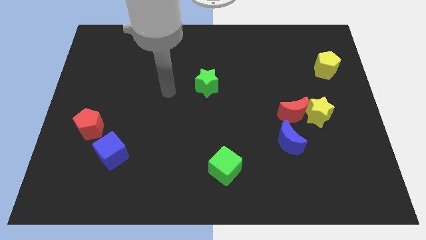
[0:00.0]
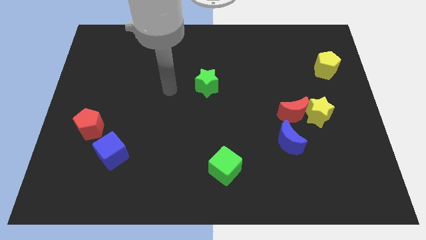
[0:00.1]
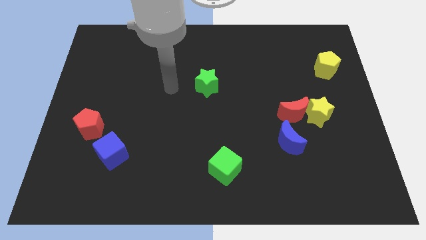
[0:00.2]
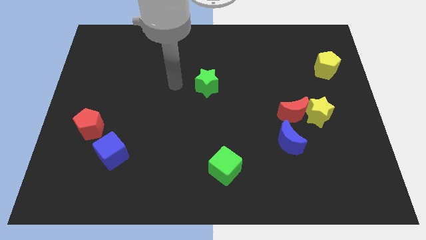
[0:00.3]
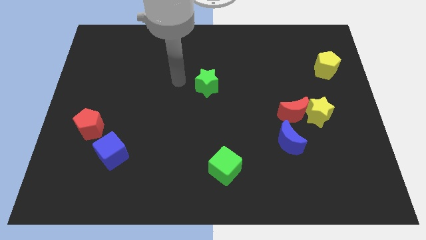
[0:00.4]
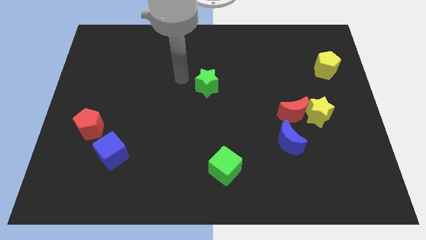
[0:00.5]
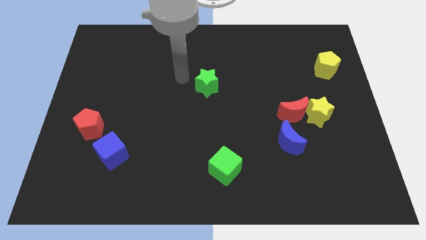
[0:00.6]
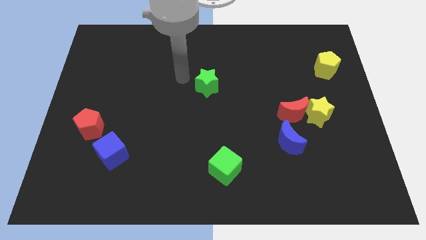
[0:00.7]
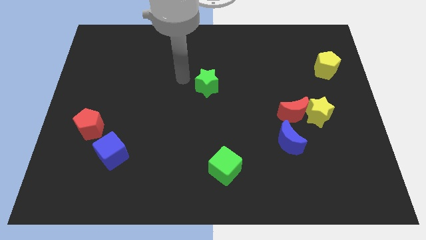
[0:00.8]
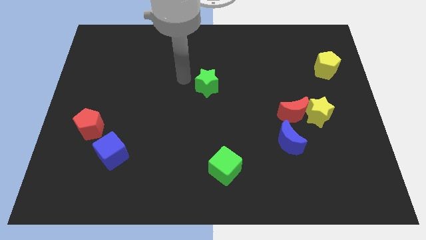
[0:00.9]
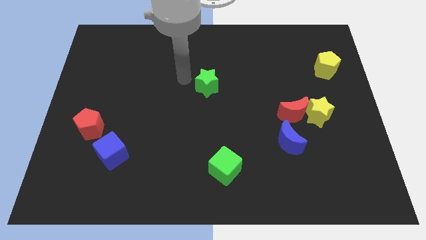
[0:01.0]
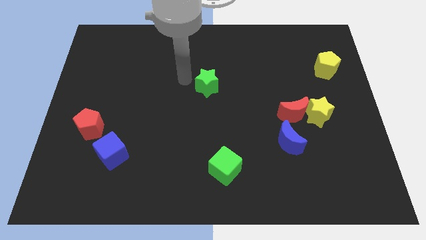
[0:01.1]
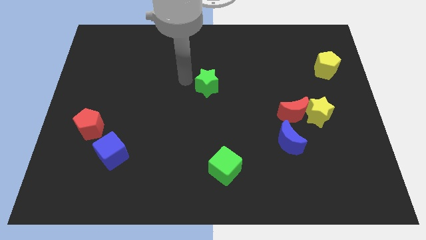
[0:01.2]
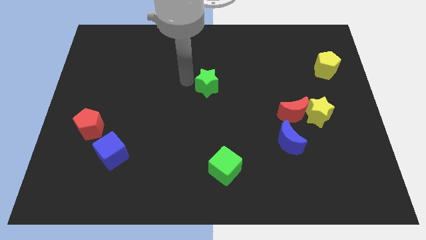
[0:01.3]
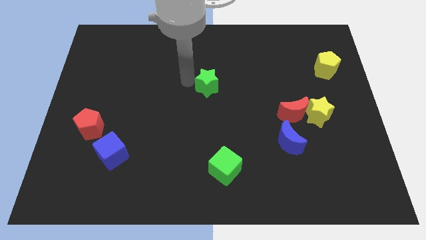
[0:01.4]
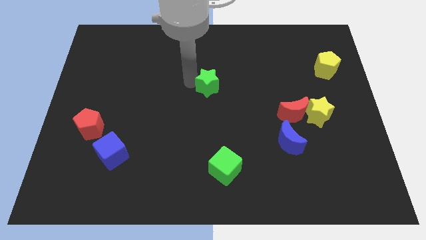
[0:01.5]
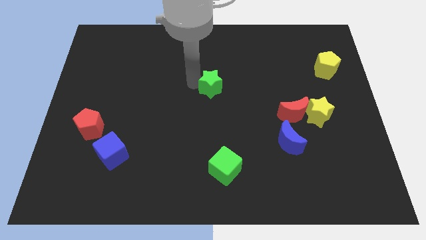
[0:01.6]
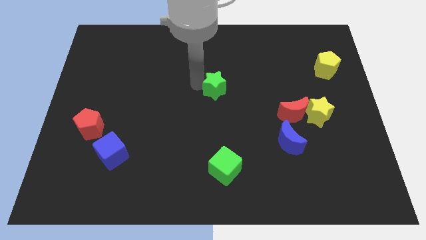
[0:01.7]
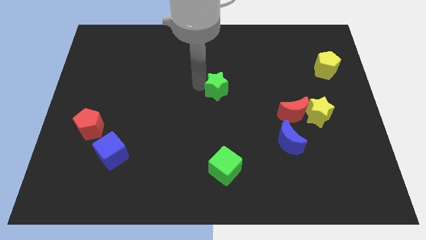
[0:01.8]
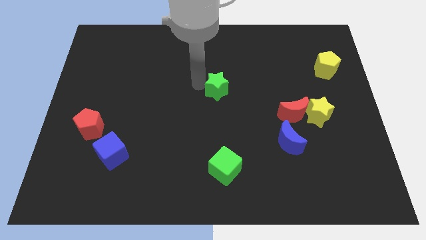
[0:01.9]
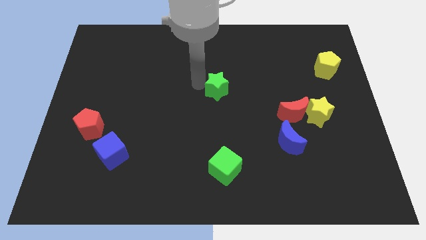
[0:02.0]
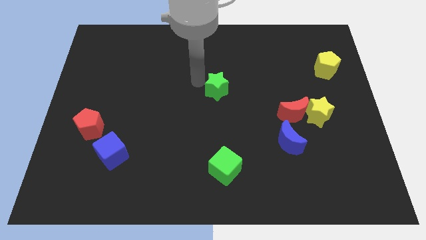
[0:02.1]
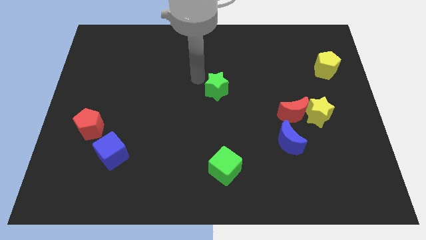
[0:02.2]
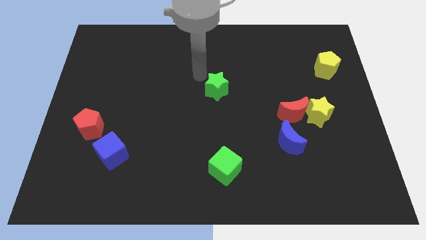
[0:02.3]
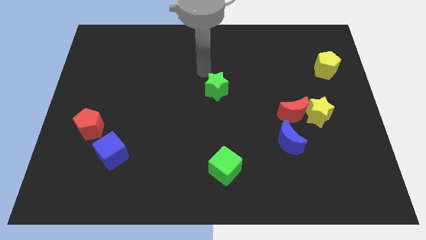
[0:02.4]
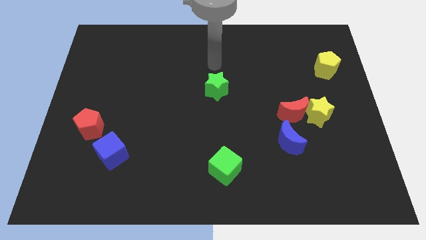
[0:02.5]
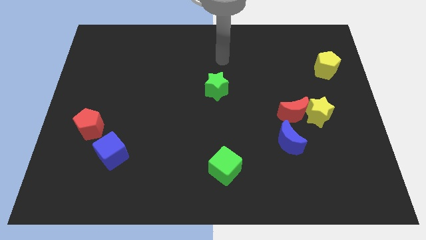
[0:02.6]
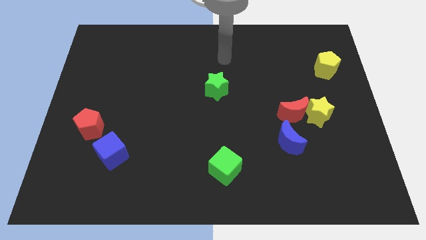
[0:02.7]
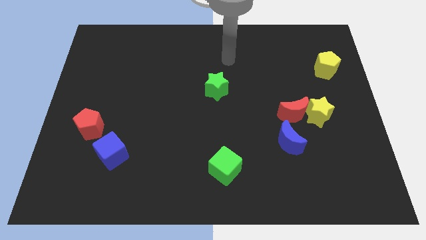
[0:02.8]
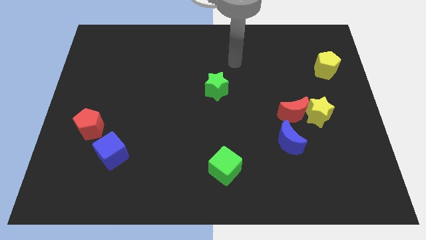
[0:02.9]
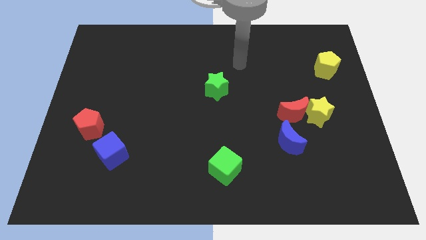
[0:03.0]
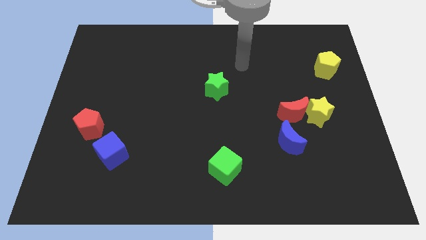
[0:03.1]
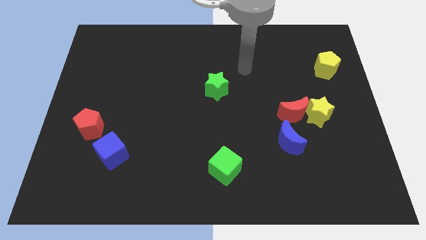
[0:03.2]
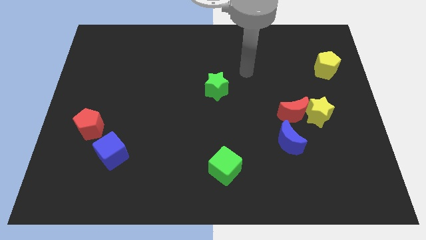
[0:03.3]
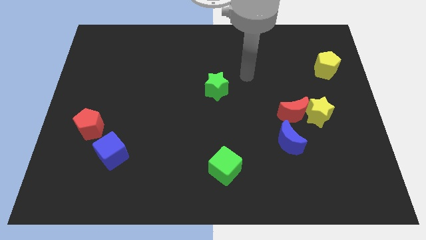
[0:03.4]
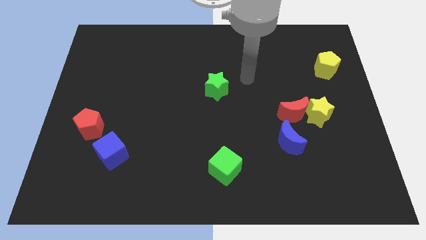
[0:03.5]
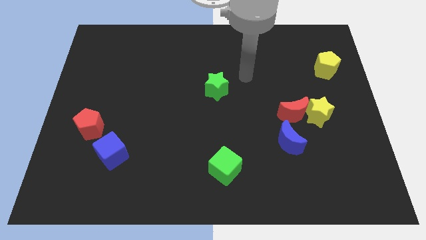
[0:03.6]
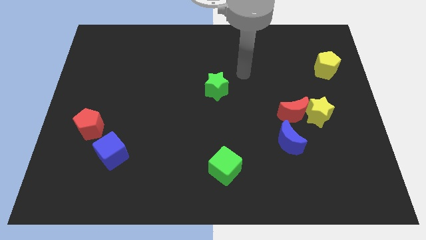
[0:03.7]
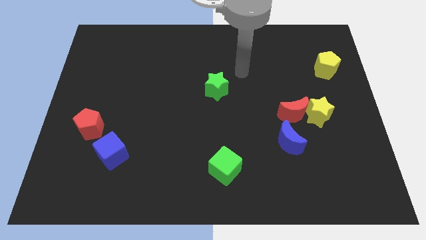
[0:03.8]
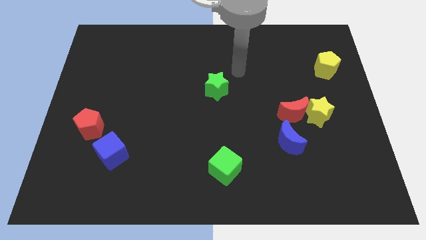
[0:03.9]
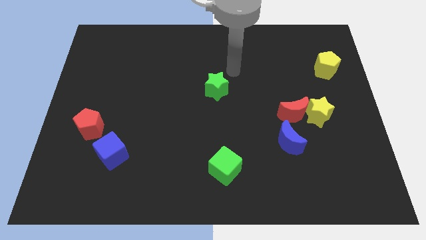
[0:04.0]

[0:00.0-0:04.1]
slightly move the green star to the right

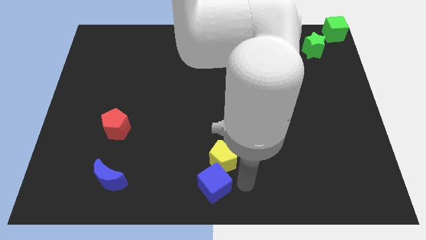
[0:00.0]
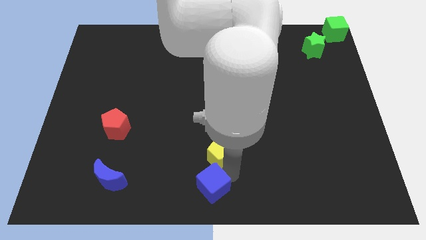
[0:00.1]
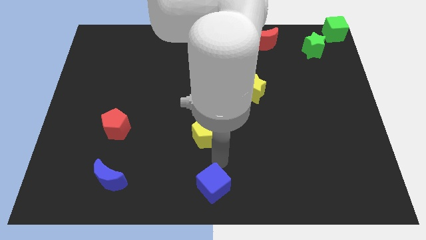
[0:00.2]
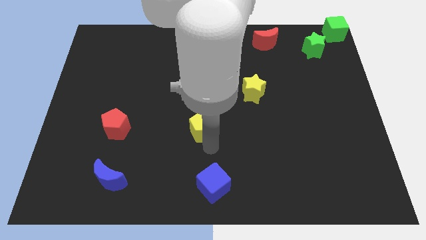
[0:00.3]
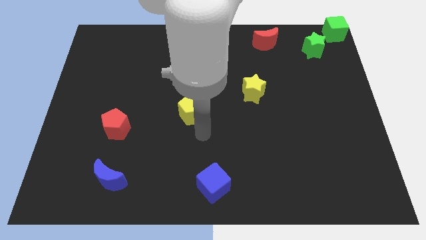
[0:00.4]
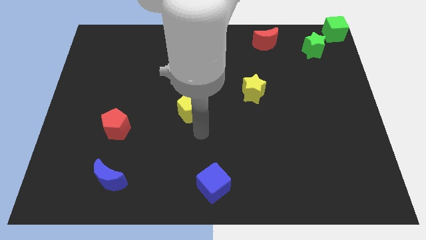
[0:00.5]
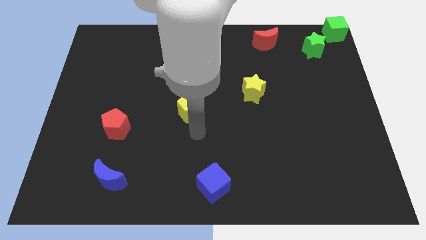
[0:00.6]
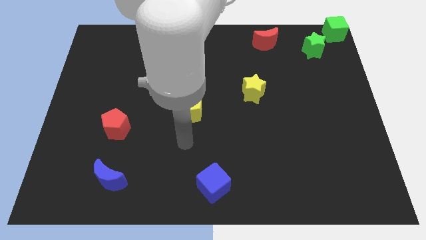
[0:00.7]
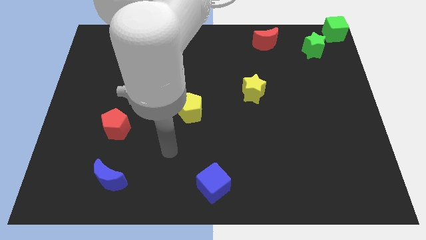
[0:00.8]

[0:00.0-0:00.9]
move the yellow pentagon slightly towards the center left of the board

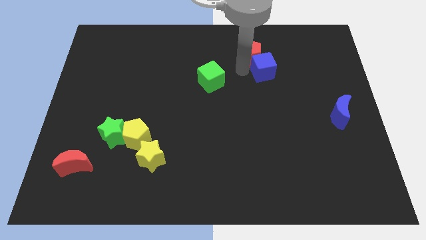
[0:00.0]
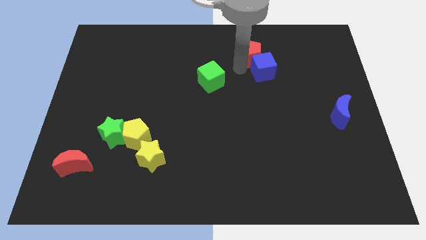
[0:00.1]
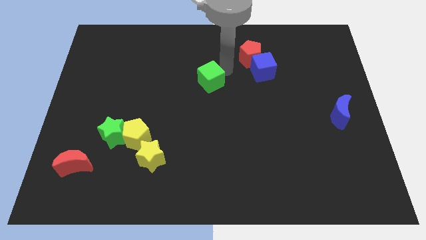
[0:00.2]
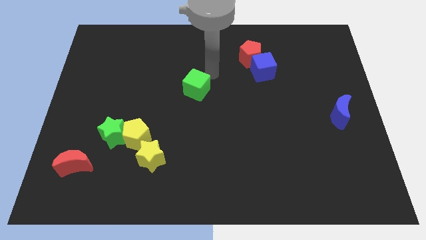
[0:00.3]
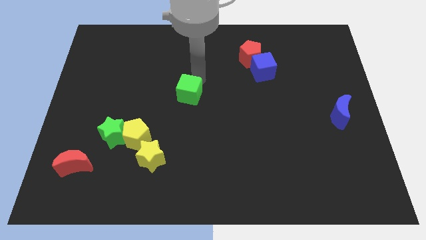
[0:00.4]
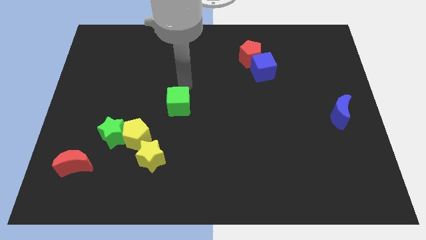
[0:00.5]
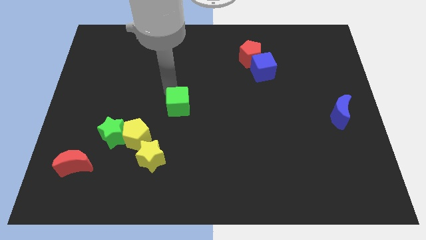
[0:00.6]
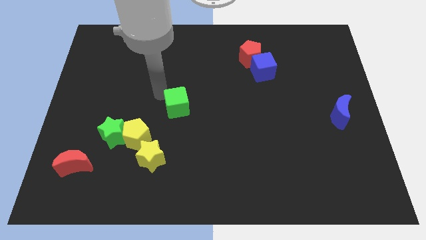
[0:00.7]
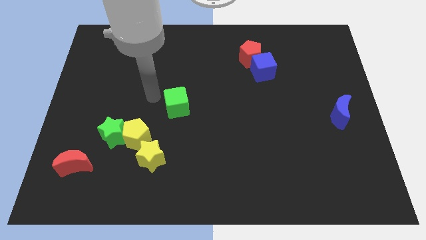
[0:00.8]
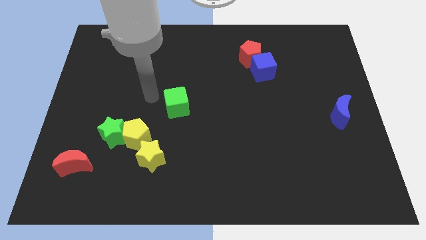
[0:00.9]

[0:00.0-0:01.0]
move the green cube diagonally top right to the yellow pentagon

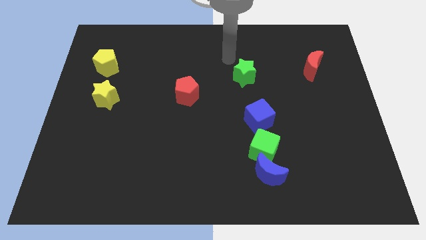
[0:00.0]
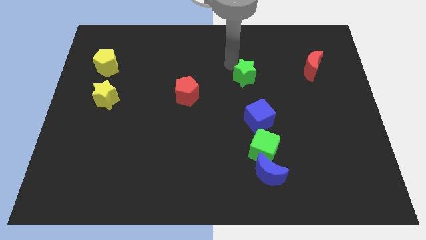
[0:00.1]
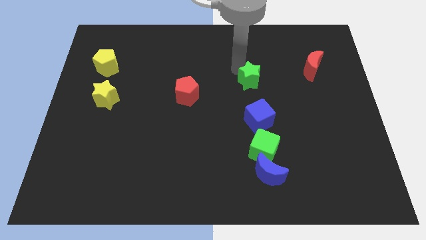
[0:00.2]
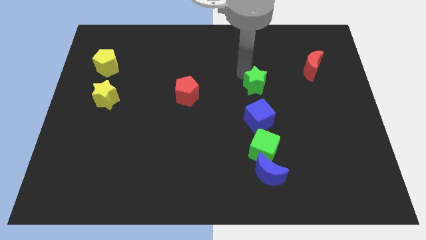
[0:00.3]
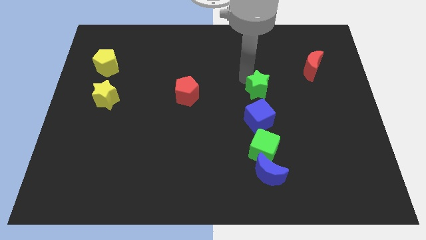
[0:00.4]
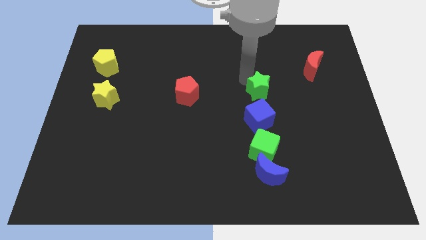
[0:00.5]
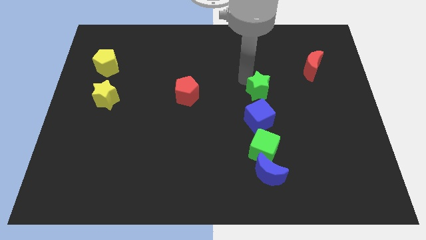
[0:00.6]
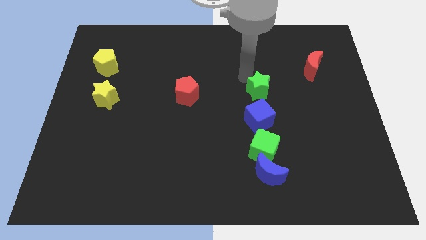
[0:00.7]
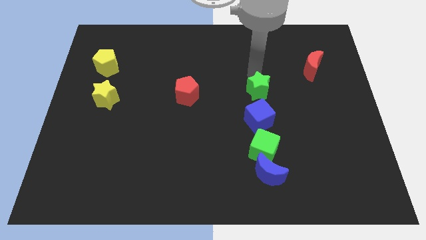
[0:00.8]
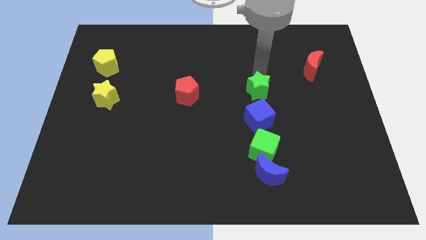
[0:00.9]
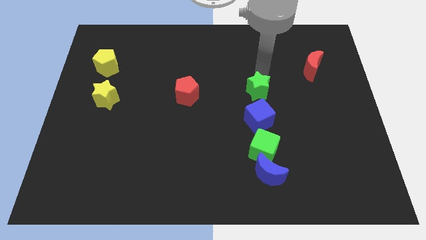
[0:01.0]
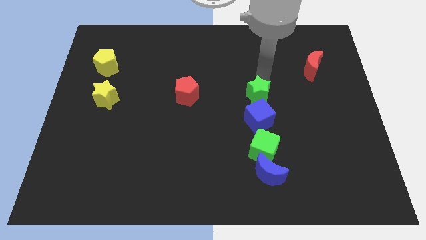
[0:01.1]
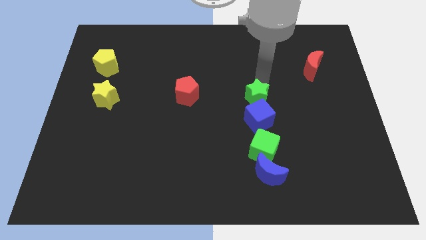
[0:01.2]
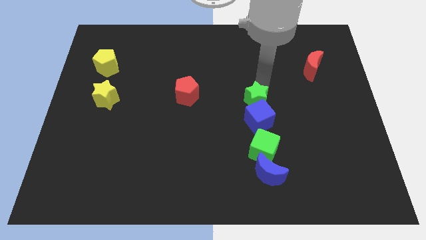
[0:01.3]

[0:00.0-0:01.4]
push the green star above the blue cube

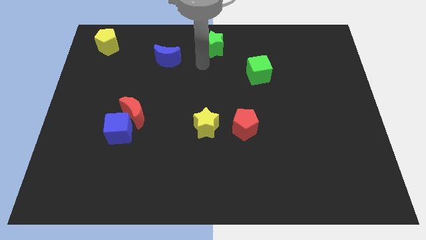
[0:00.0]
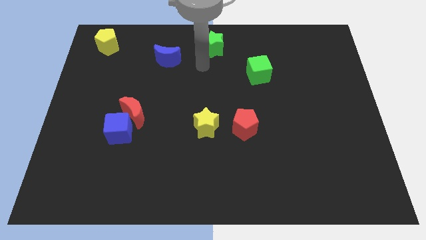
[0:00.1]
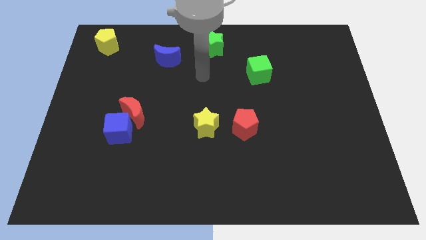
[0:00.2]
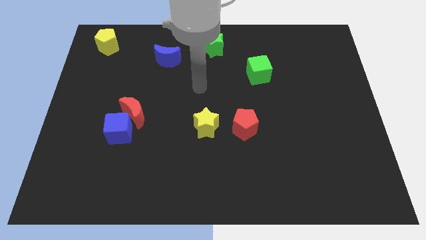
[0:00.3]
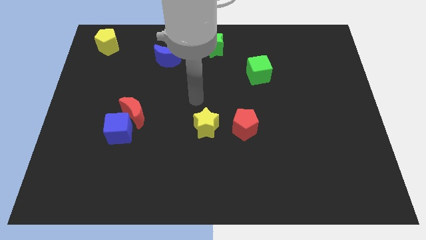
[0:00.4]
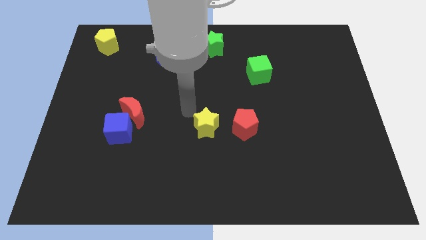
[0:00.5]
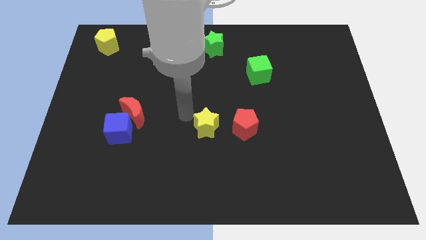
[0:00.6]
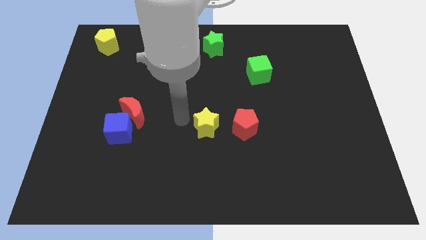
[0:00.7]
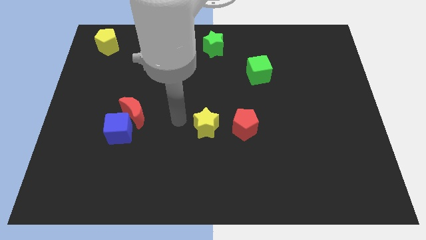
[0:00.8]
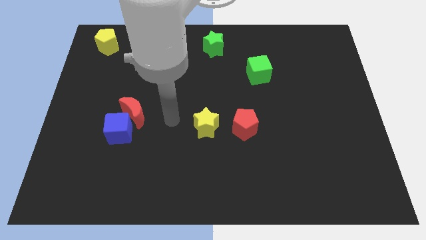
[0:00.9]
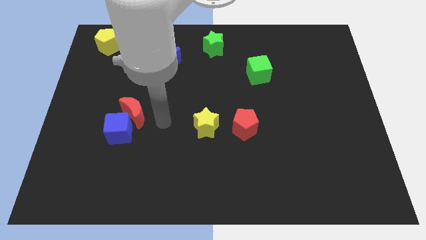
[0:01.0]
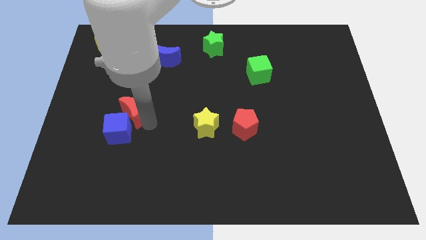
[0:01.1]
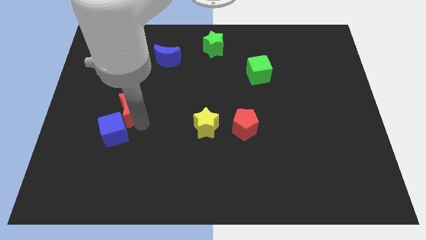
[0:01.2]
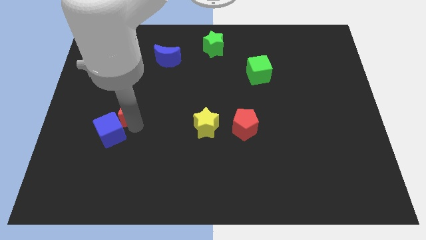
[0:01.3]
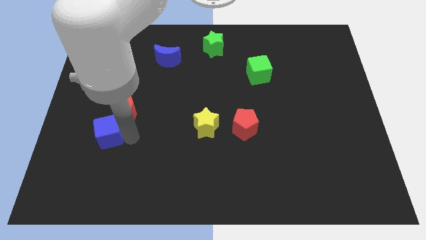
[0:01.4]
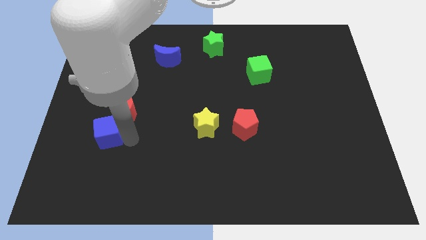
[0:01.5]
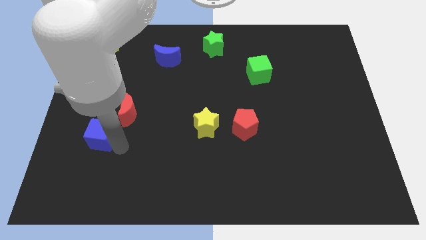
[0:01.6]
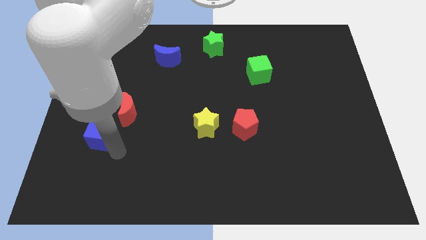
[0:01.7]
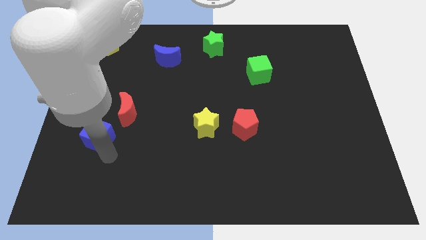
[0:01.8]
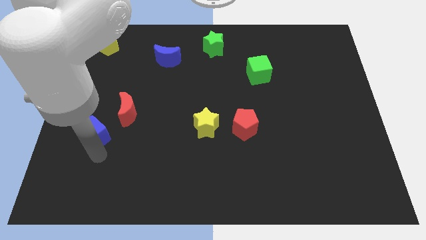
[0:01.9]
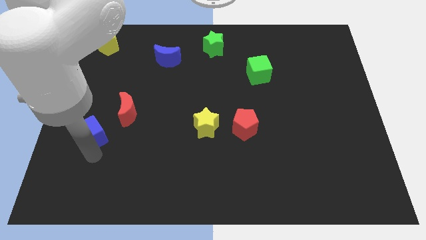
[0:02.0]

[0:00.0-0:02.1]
separate the blue cube from the red crescent
